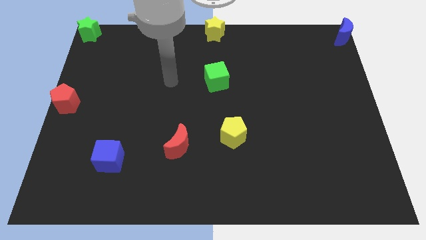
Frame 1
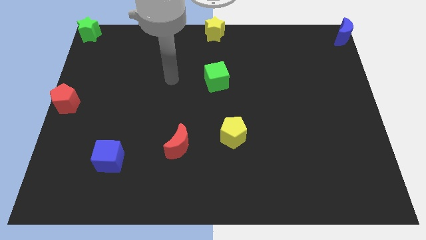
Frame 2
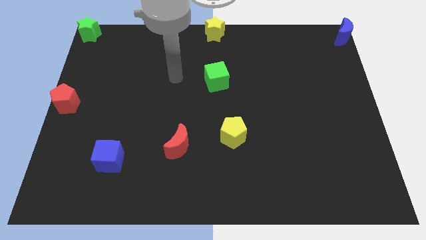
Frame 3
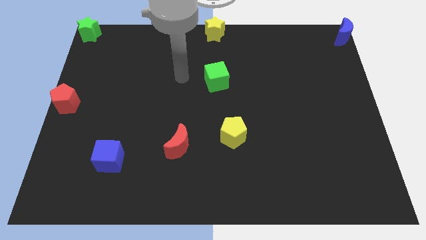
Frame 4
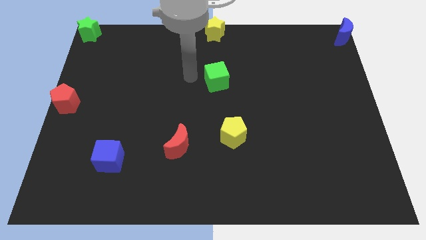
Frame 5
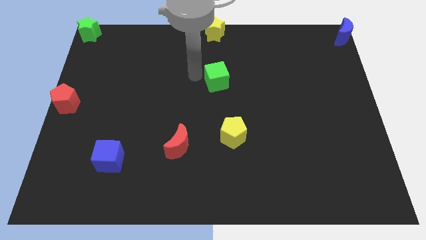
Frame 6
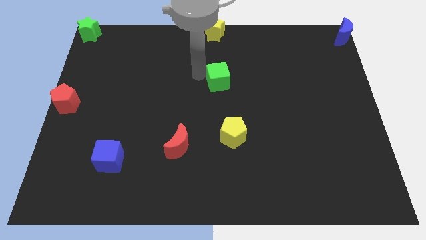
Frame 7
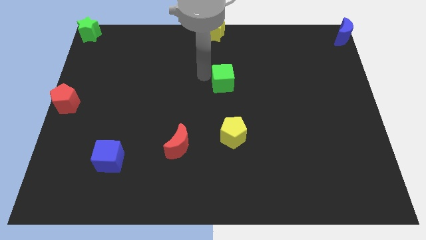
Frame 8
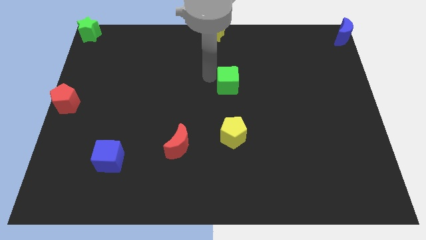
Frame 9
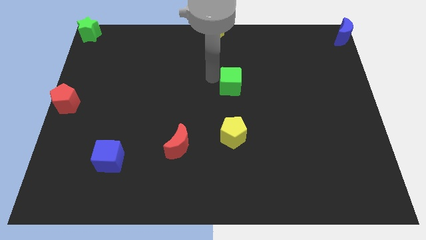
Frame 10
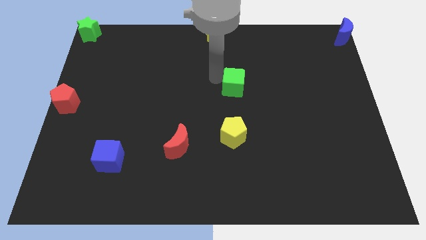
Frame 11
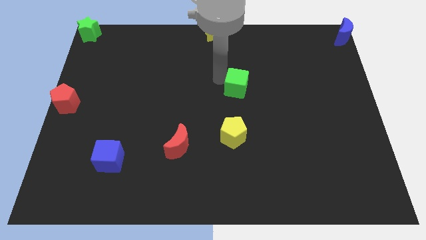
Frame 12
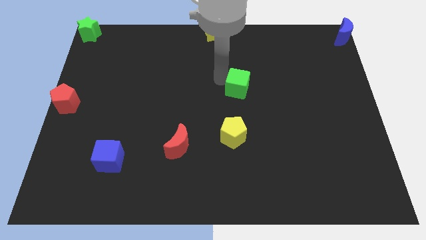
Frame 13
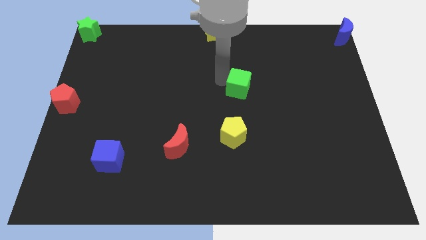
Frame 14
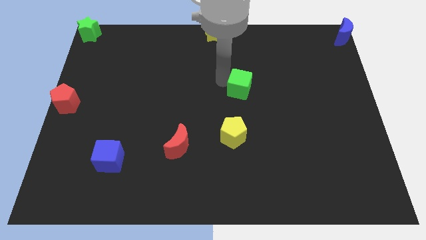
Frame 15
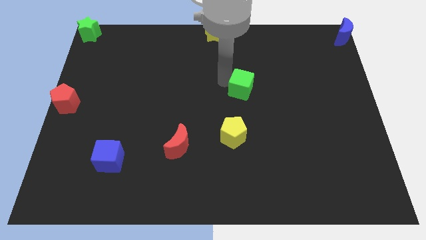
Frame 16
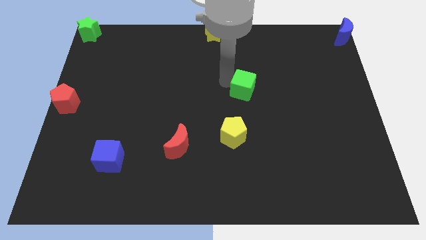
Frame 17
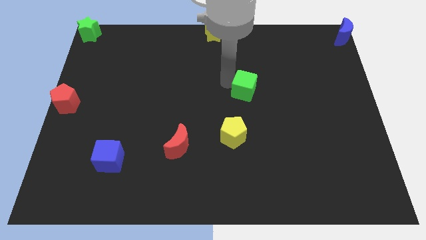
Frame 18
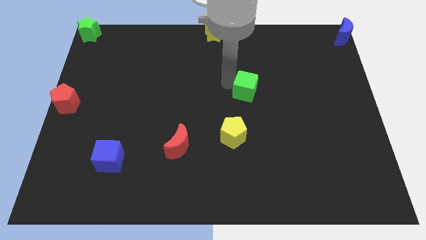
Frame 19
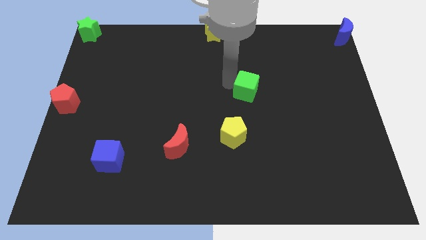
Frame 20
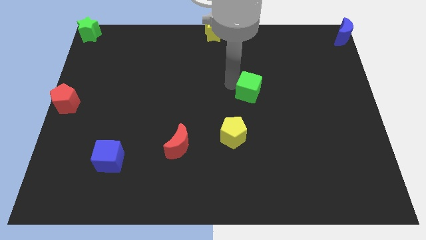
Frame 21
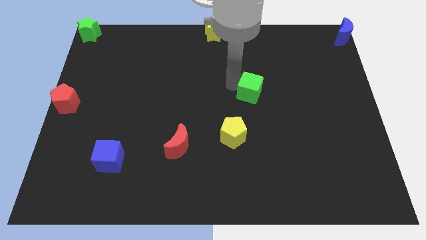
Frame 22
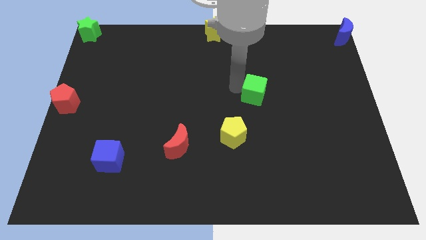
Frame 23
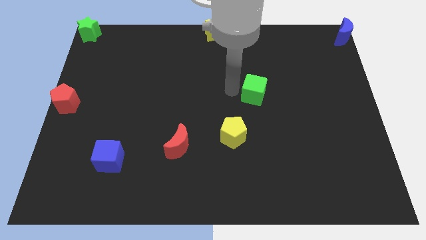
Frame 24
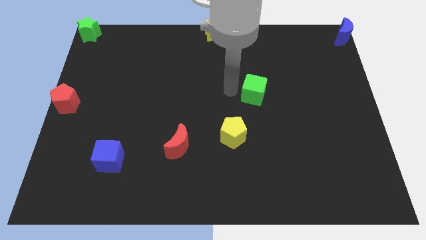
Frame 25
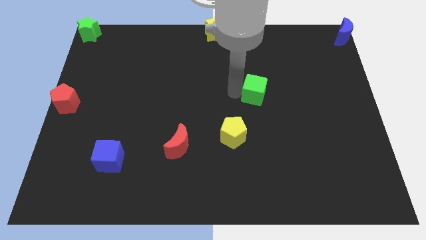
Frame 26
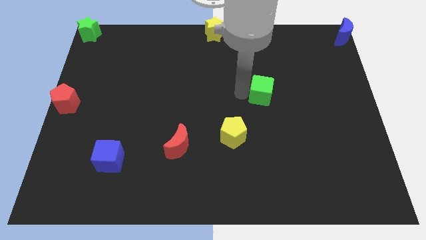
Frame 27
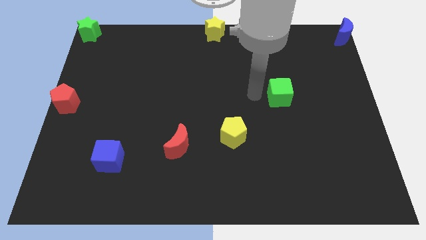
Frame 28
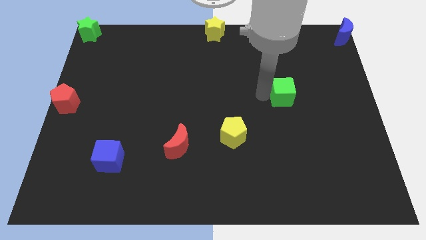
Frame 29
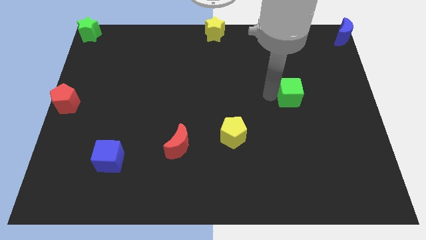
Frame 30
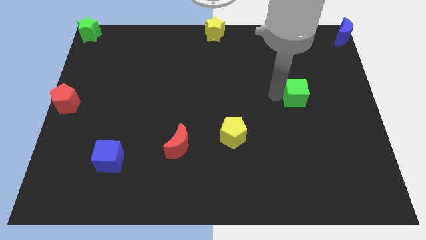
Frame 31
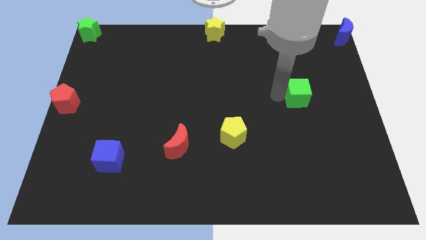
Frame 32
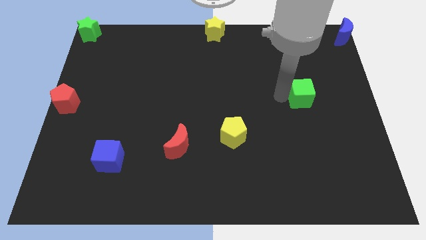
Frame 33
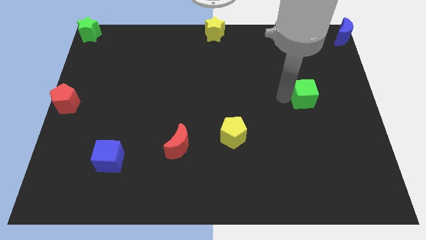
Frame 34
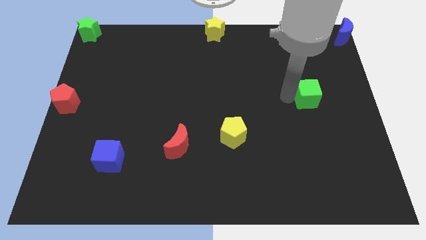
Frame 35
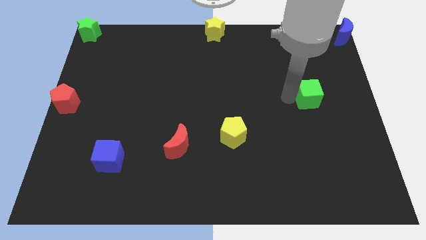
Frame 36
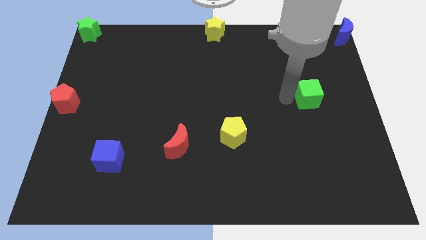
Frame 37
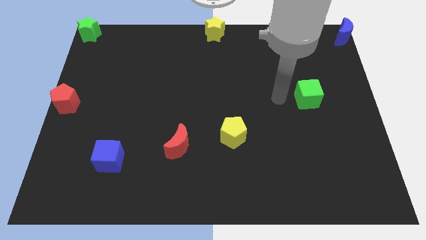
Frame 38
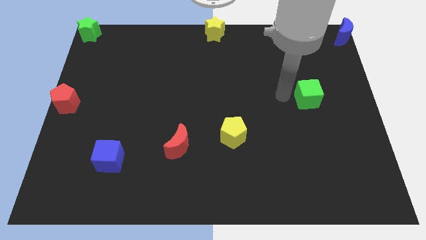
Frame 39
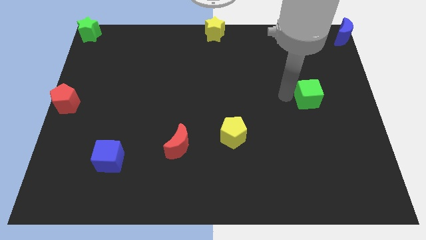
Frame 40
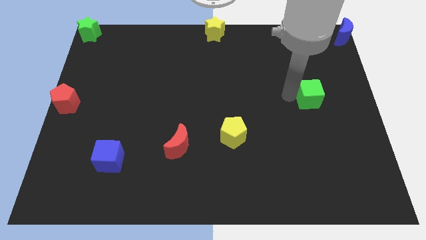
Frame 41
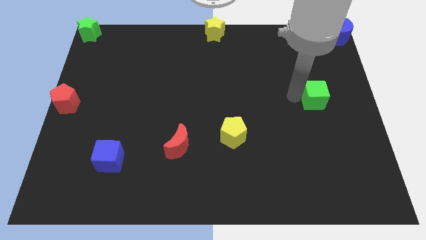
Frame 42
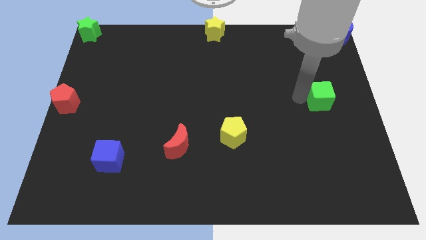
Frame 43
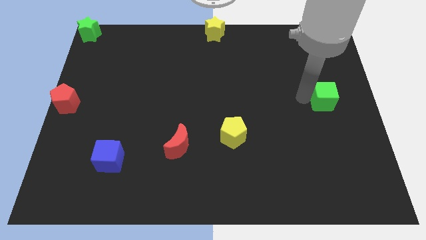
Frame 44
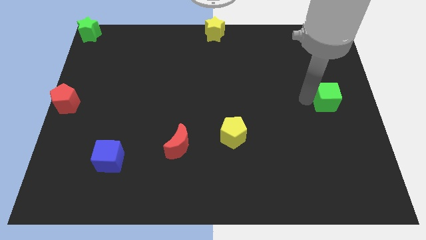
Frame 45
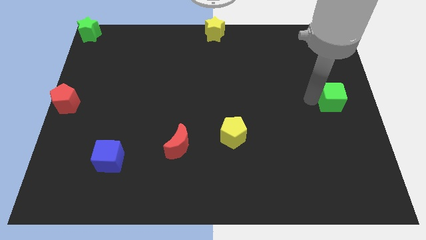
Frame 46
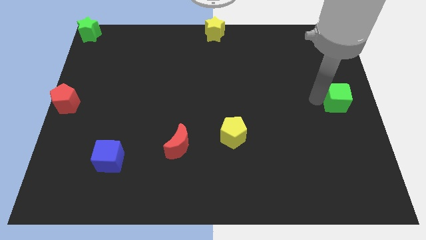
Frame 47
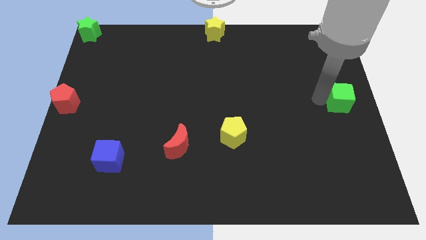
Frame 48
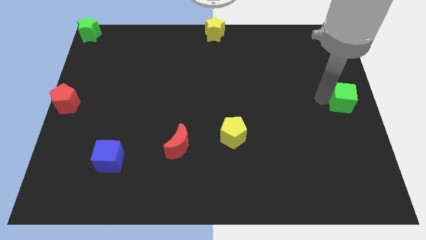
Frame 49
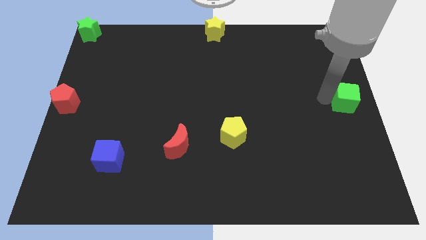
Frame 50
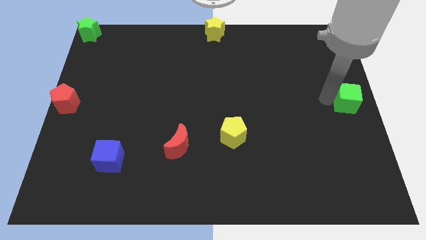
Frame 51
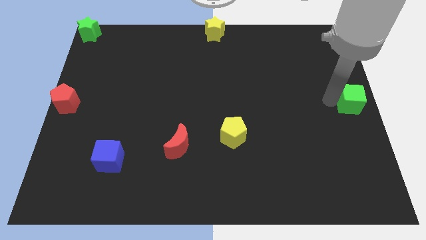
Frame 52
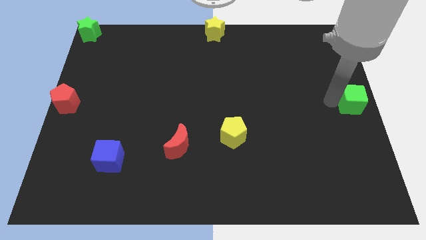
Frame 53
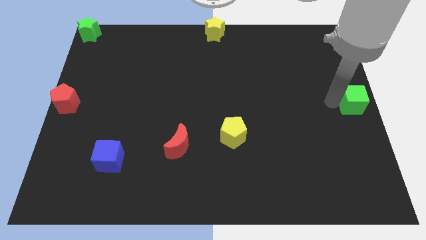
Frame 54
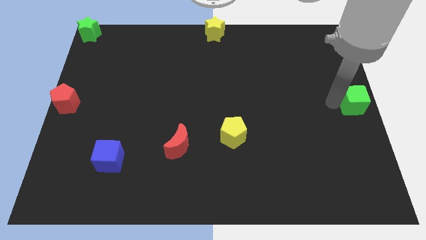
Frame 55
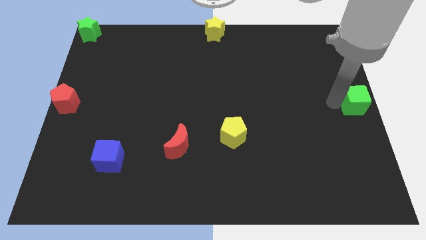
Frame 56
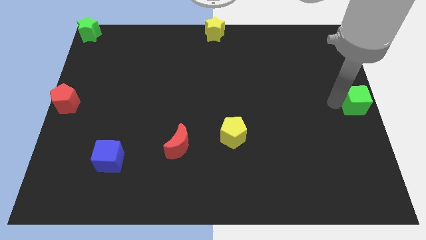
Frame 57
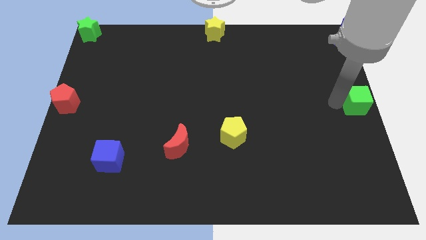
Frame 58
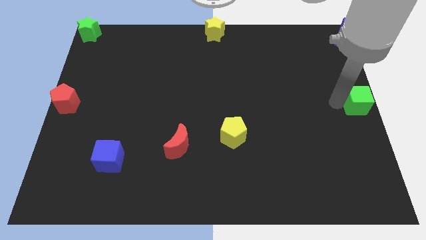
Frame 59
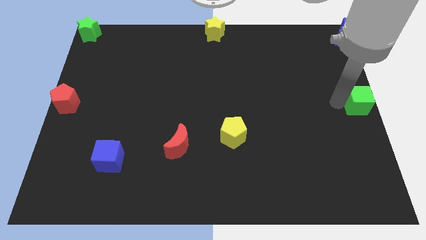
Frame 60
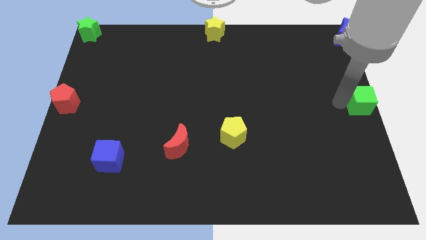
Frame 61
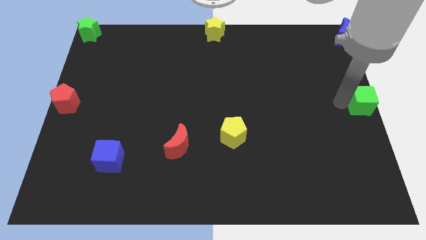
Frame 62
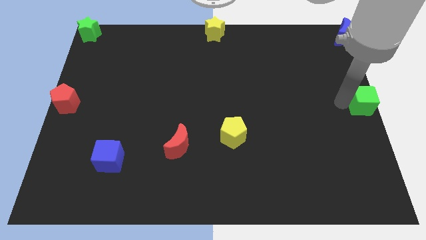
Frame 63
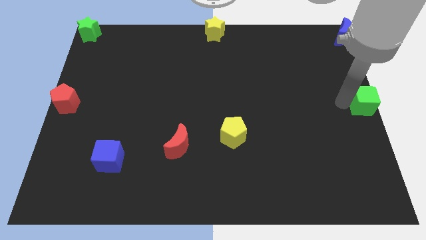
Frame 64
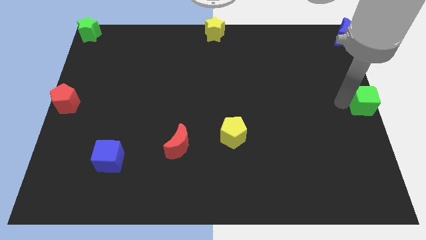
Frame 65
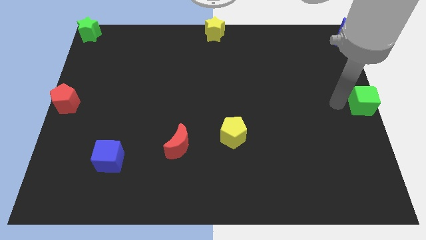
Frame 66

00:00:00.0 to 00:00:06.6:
move the green cube to the center right

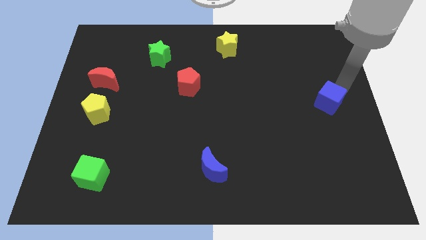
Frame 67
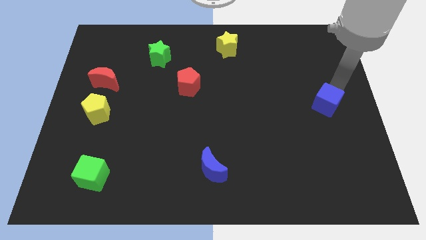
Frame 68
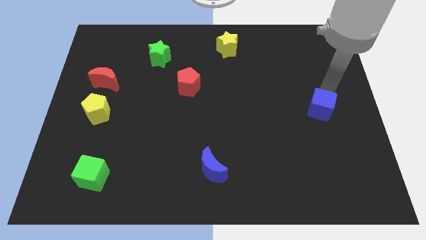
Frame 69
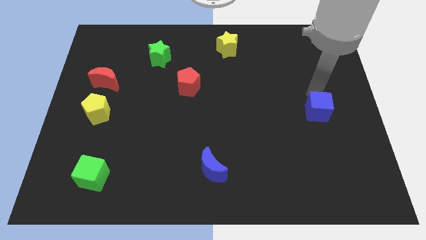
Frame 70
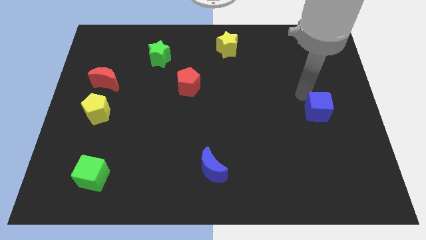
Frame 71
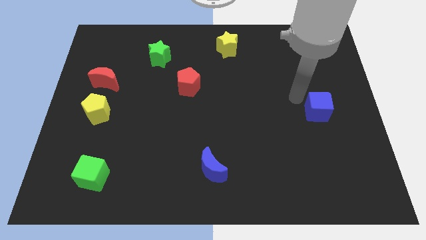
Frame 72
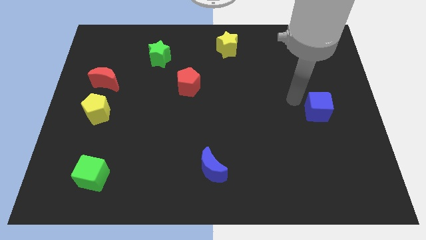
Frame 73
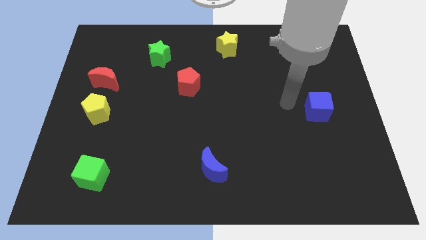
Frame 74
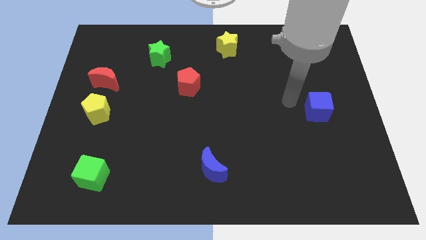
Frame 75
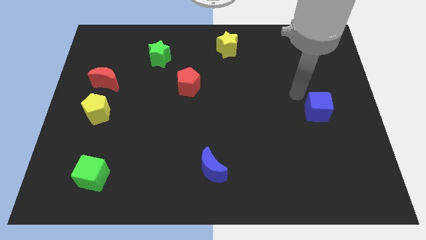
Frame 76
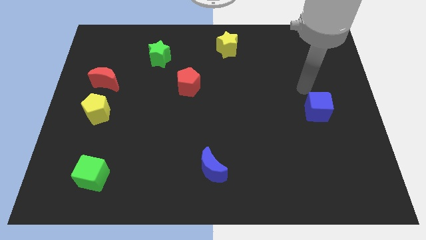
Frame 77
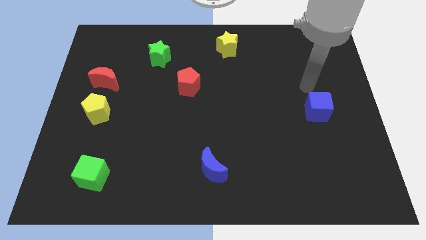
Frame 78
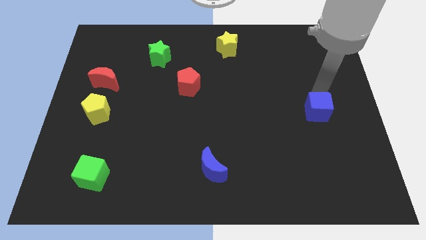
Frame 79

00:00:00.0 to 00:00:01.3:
move blue cube slightly towards its left

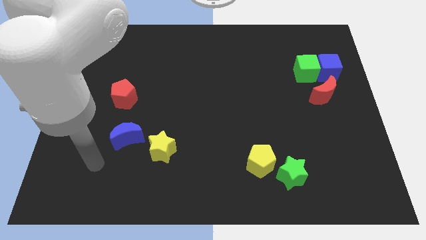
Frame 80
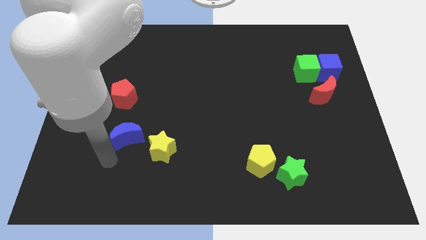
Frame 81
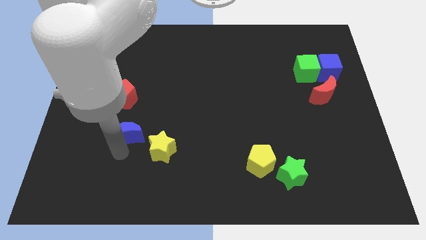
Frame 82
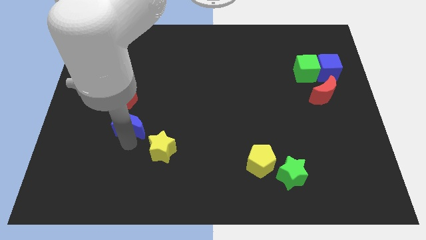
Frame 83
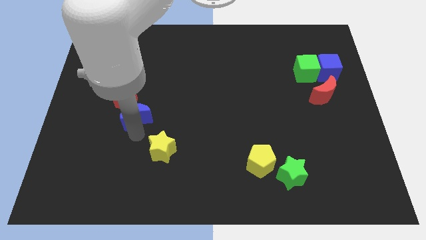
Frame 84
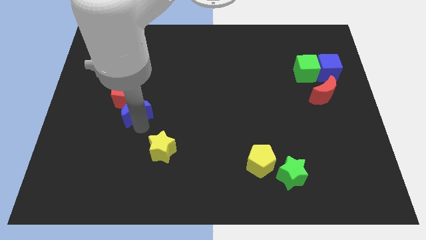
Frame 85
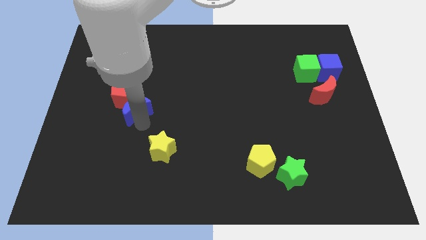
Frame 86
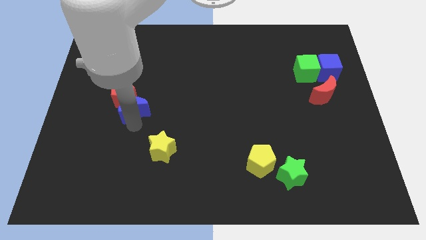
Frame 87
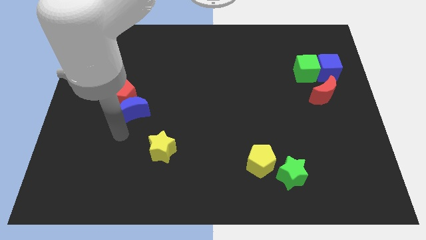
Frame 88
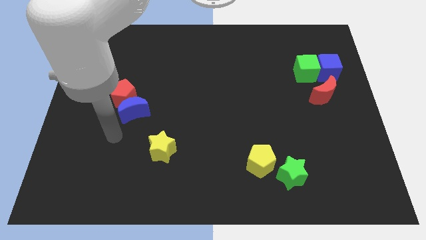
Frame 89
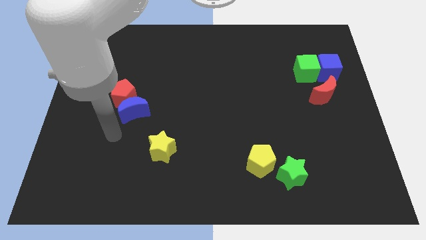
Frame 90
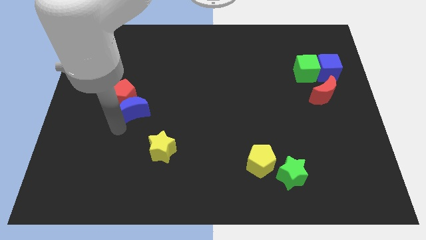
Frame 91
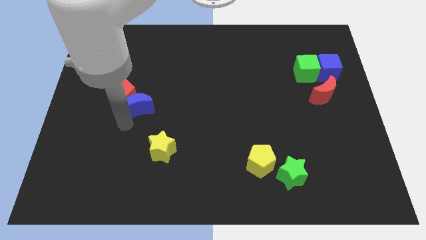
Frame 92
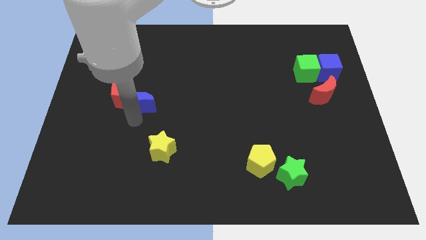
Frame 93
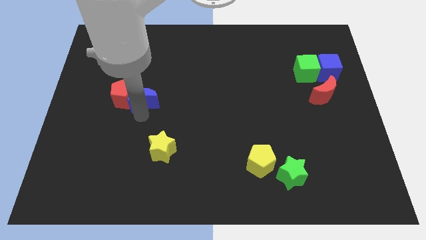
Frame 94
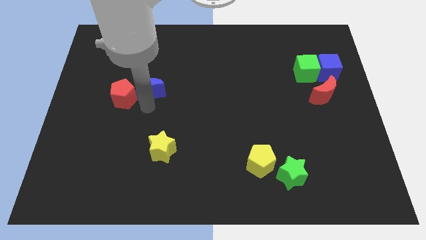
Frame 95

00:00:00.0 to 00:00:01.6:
move the blue crescent away from the yellow star
